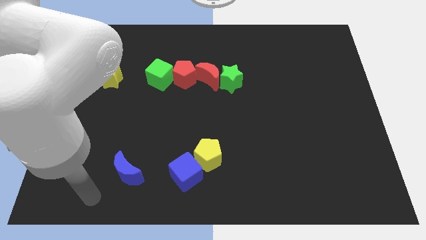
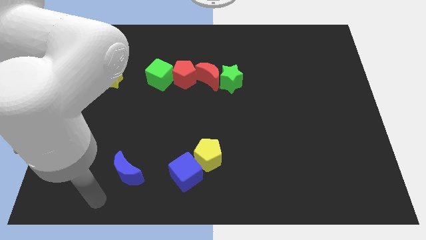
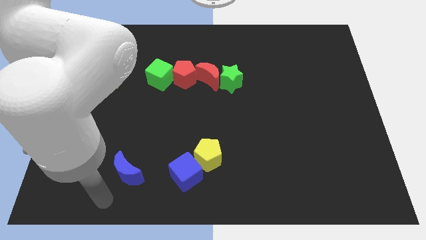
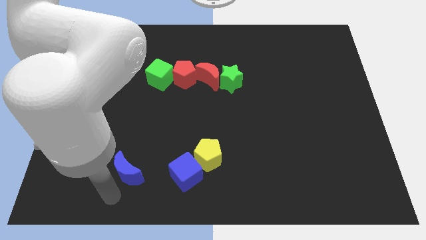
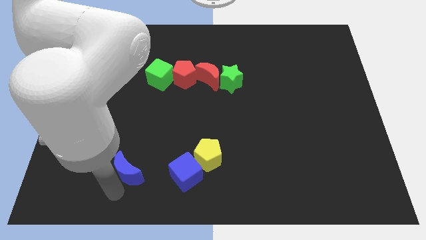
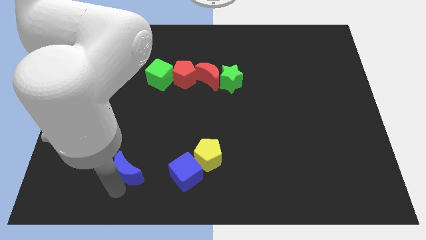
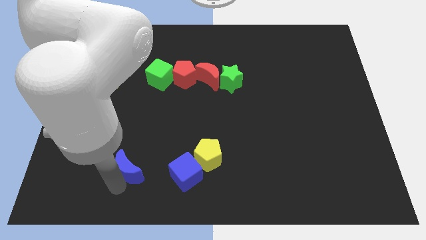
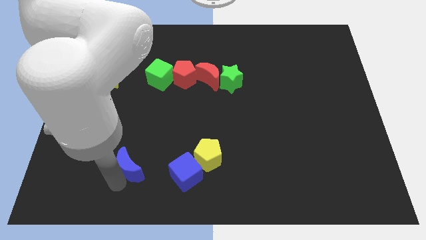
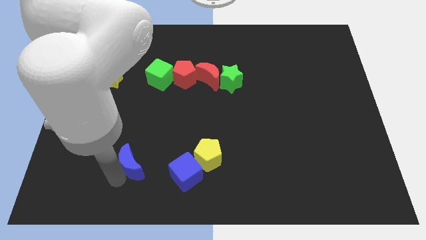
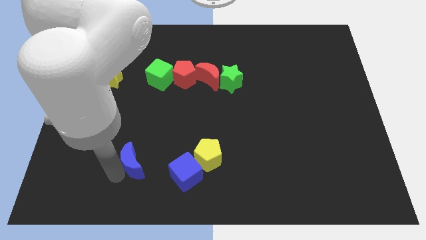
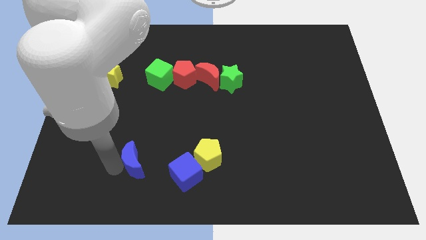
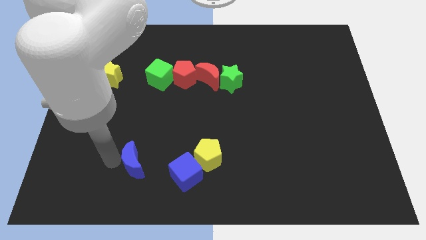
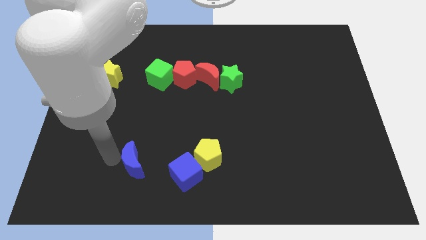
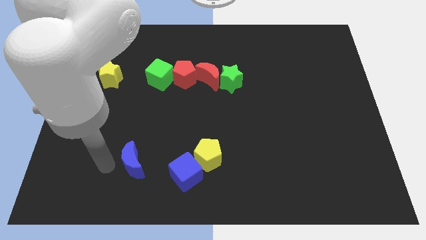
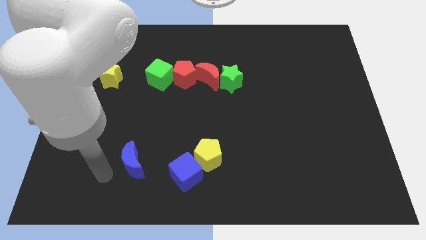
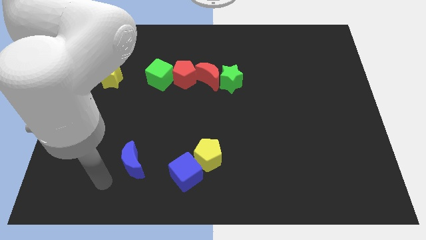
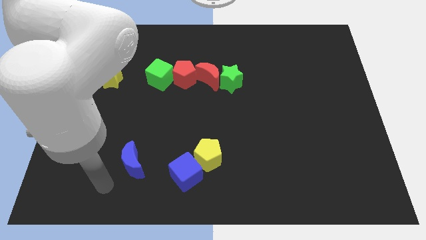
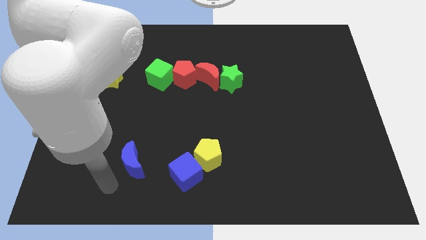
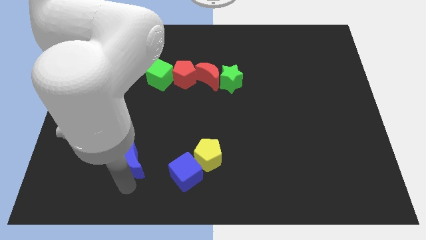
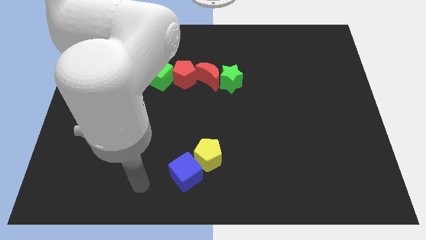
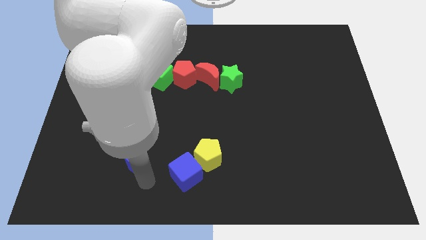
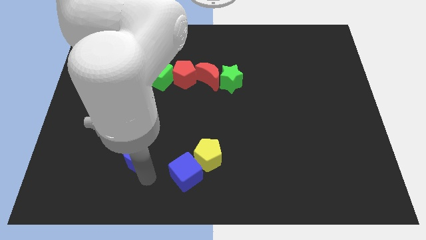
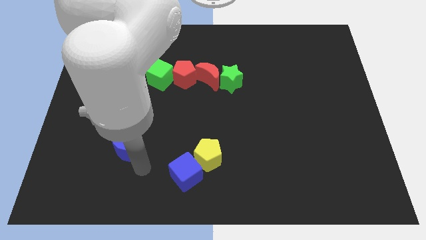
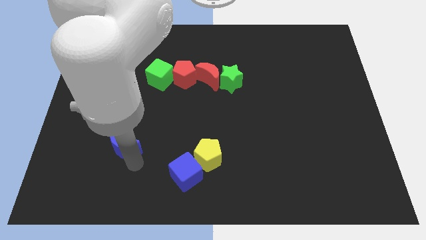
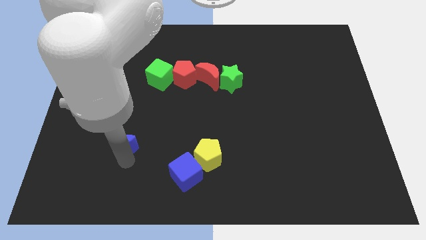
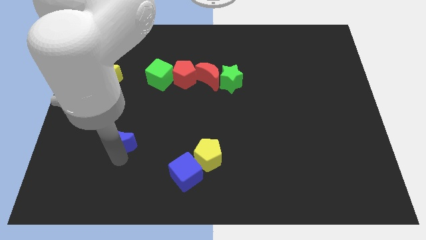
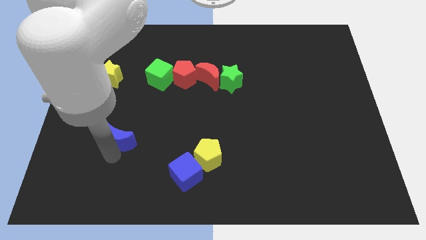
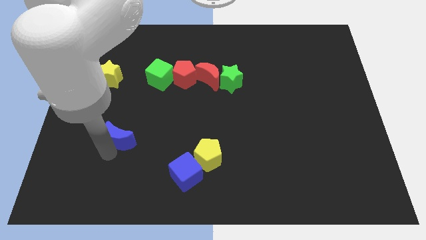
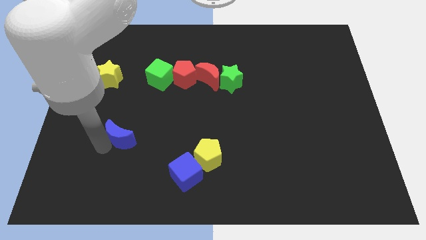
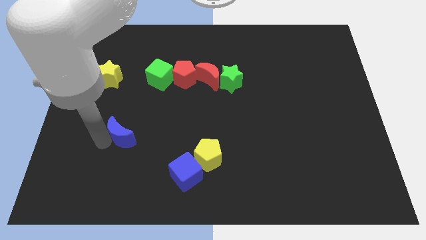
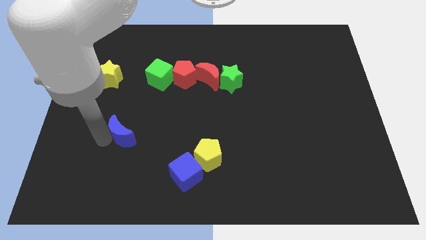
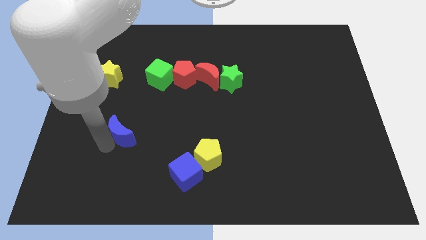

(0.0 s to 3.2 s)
push the blue moon diagonally to the top left of the blue cube

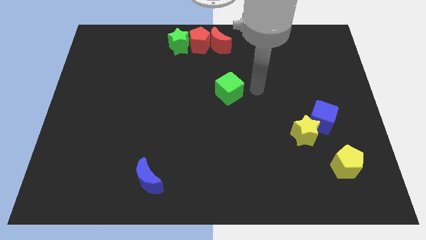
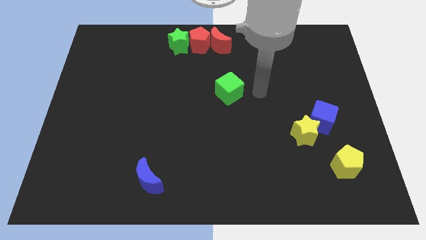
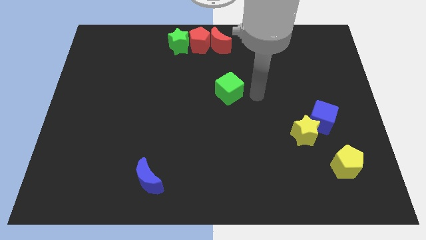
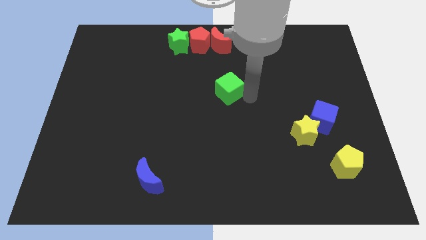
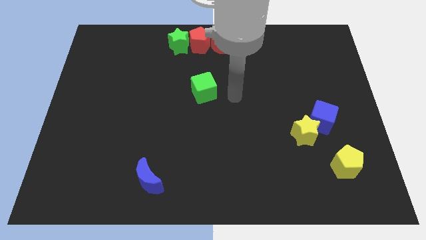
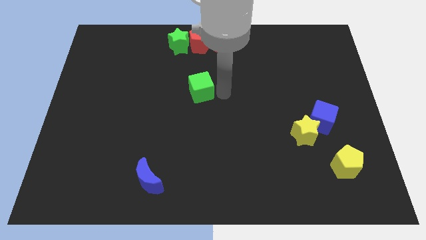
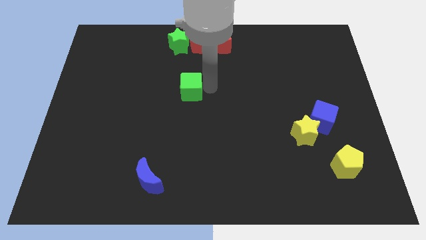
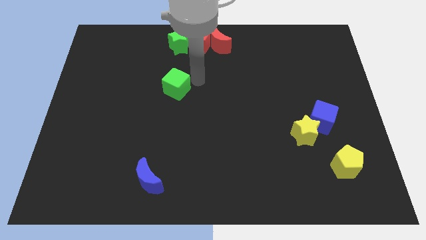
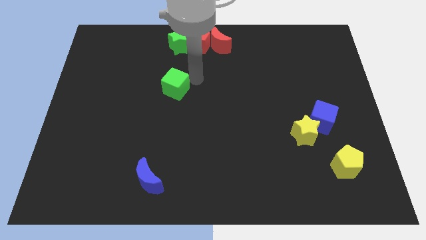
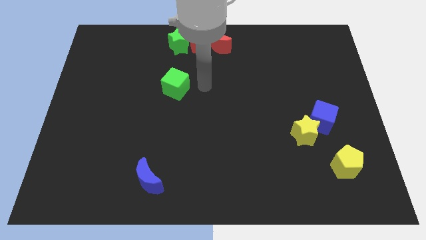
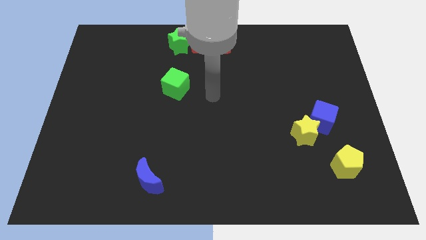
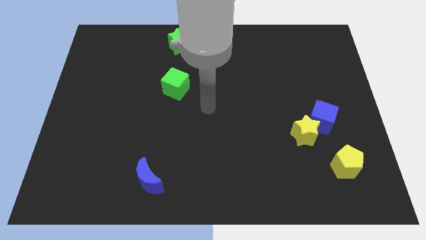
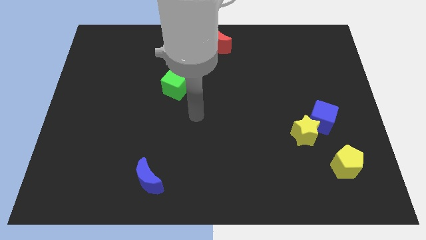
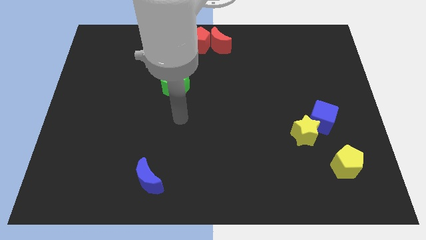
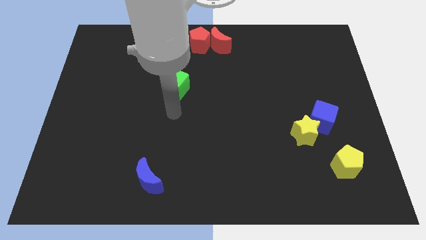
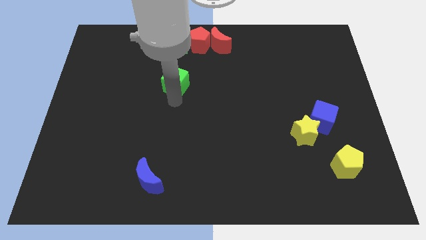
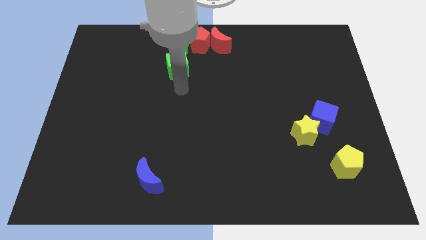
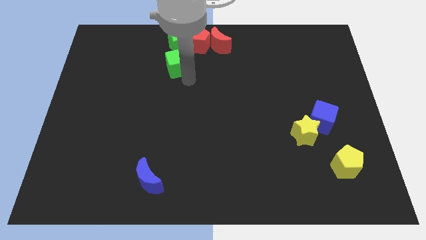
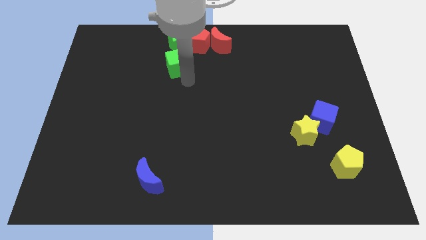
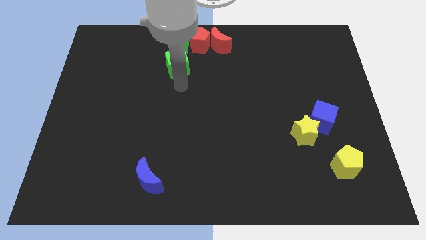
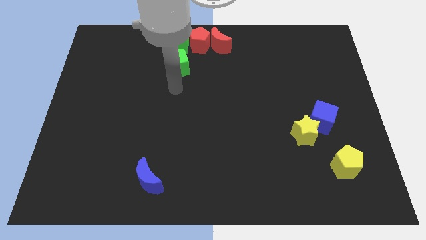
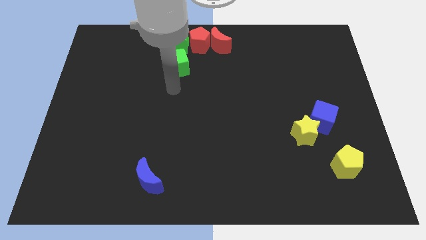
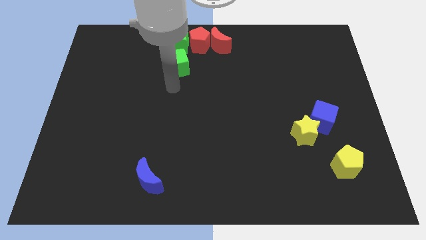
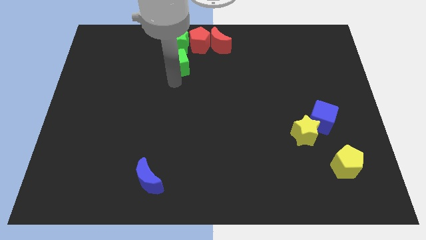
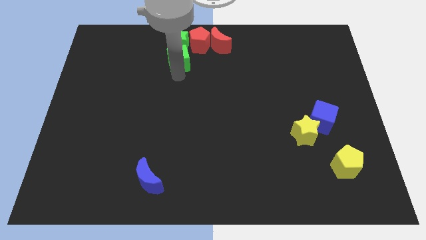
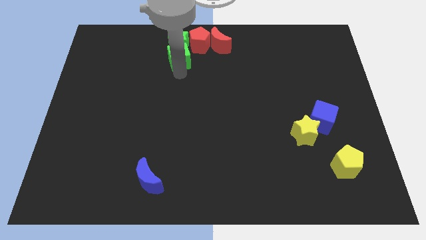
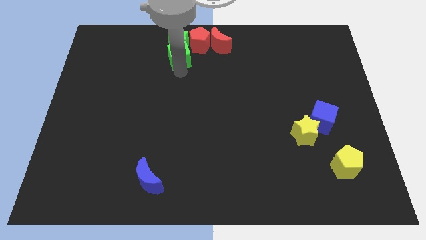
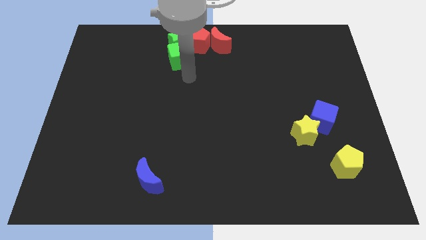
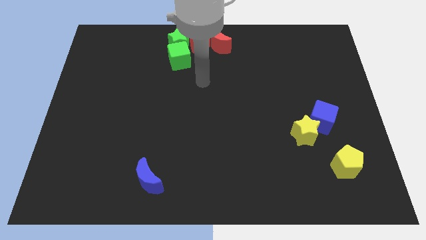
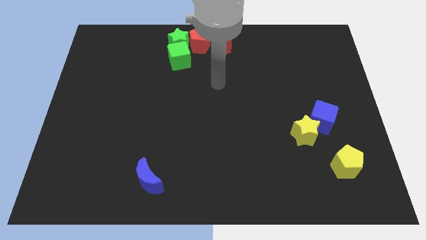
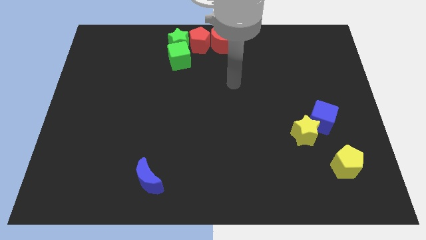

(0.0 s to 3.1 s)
push green cube into green star

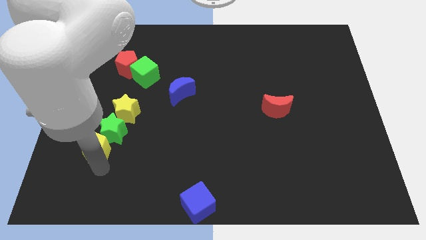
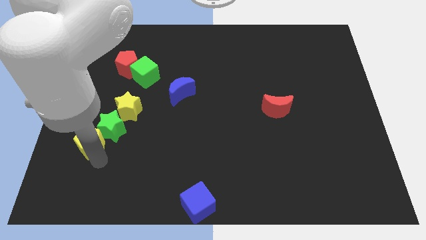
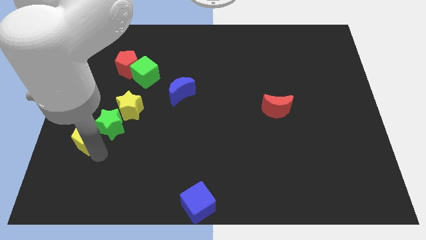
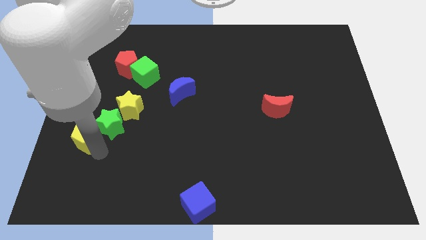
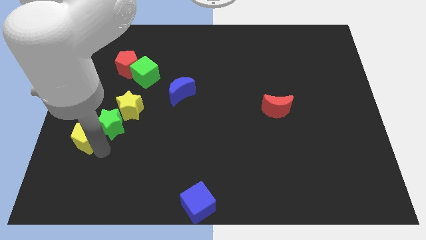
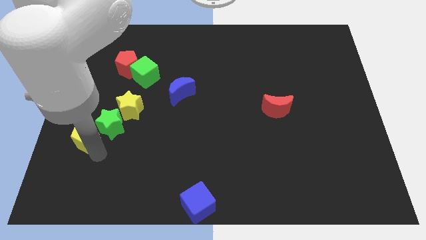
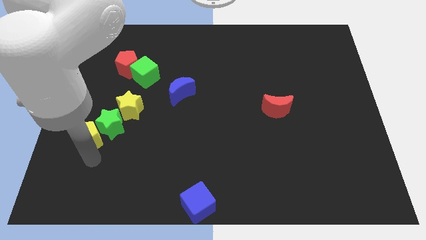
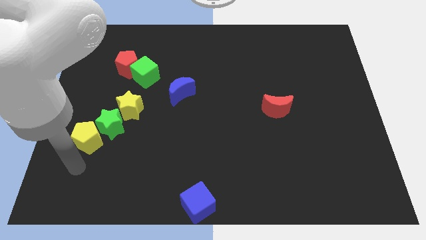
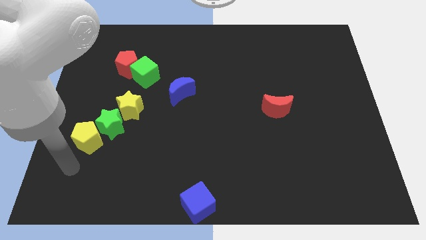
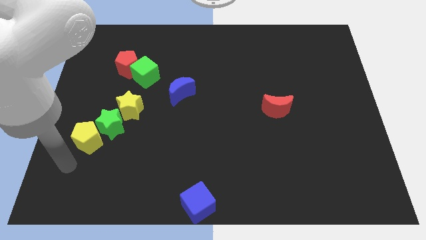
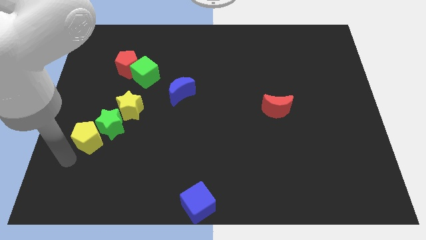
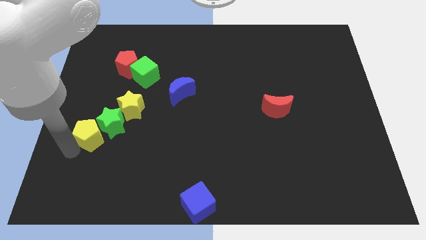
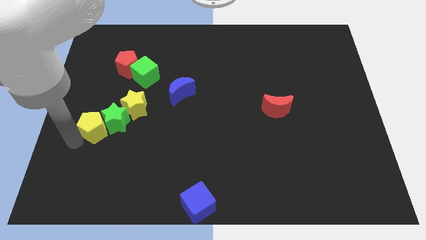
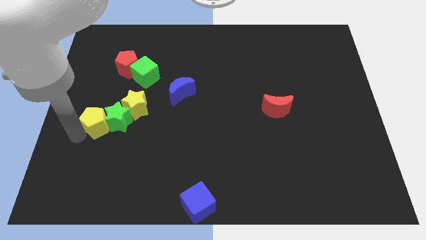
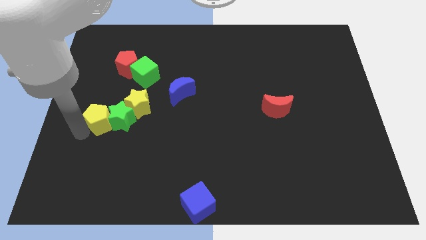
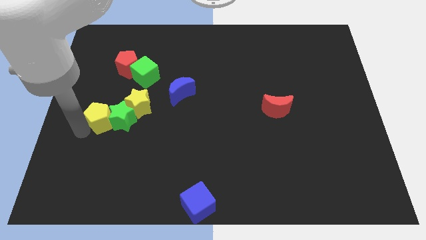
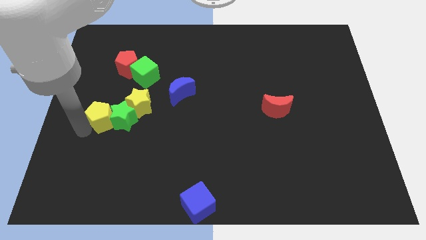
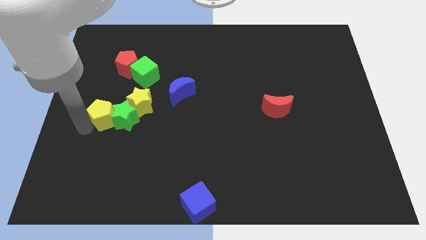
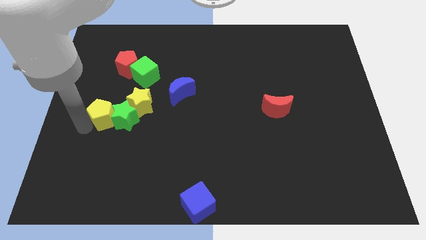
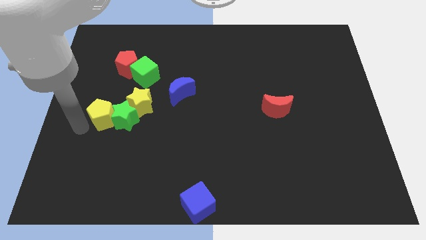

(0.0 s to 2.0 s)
place the yellow pentagon towards the left side of the green star

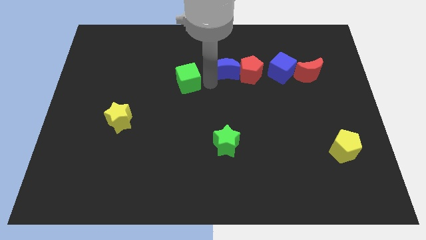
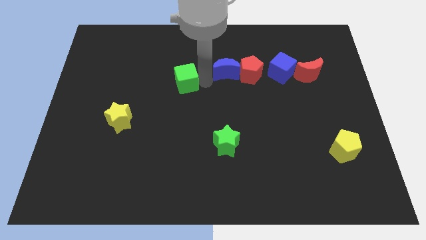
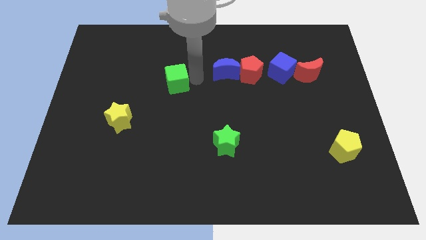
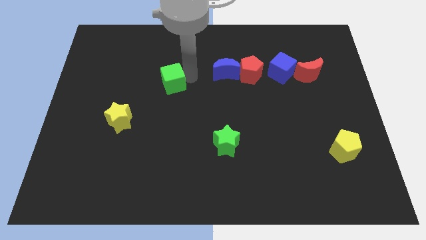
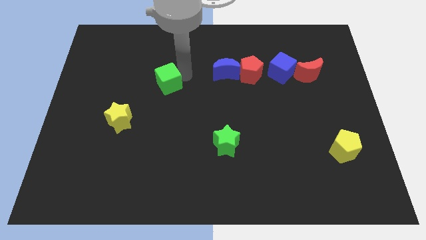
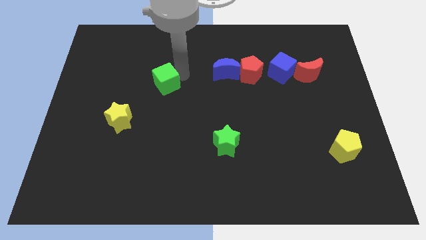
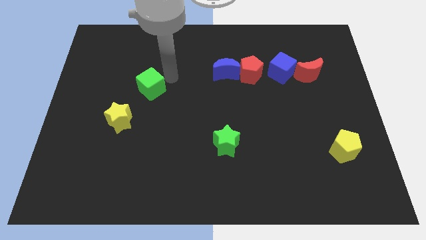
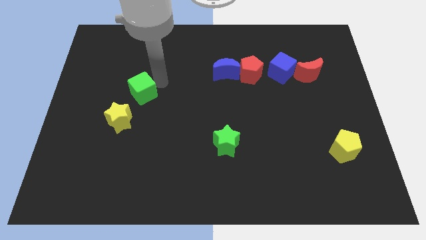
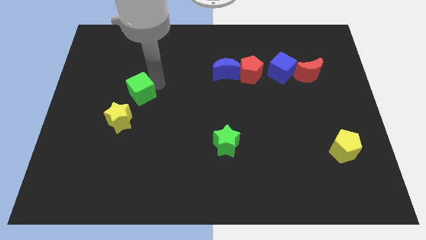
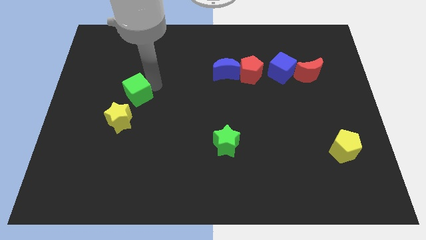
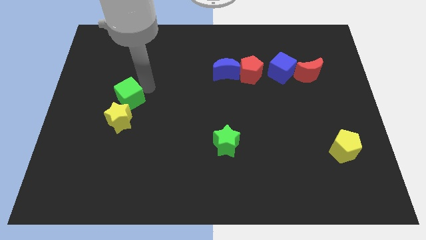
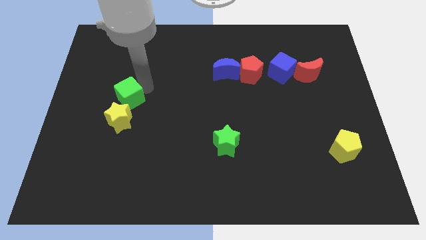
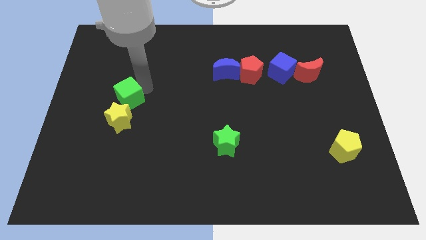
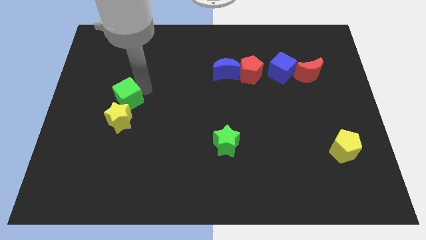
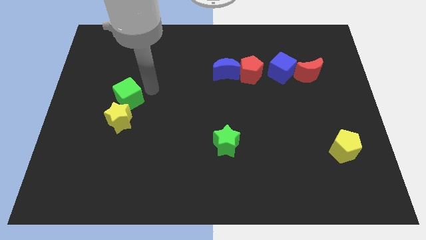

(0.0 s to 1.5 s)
place the green cube above the yellow star
